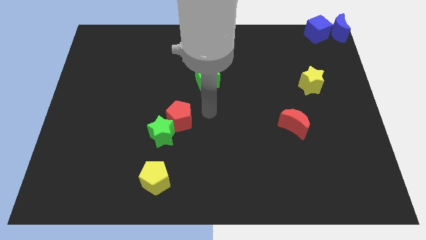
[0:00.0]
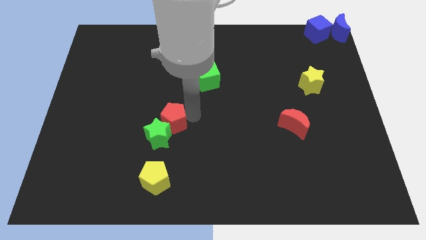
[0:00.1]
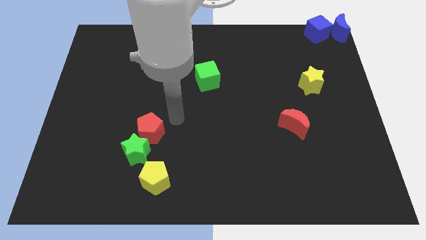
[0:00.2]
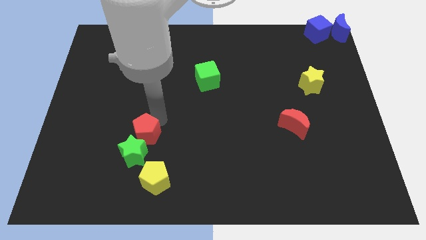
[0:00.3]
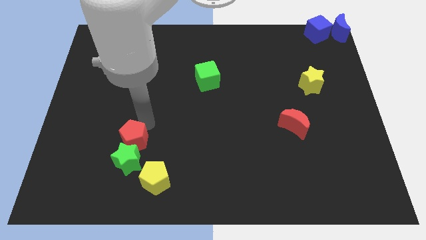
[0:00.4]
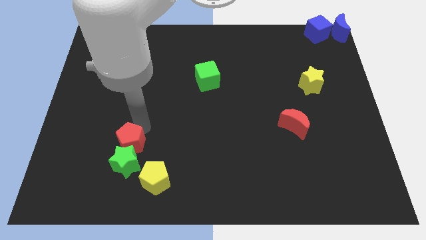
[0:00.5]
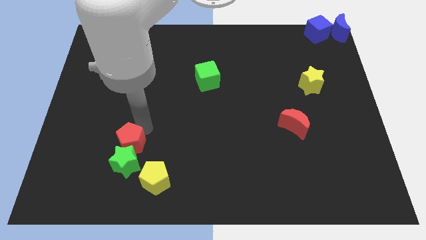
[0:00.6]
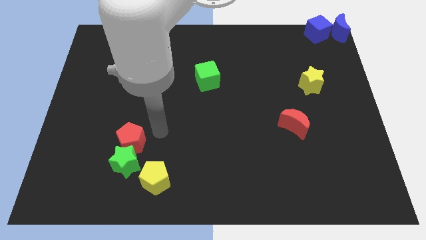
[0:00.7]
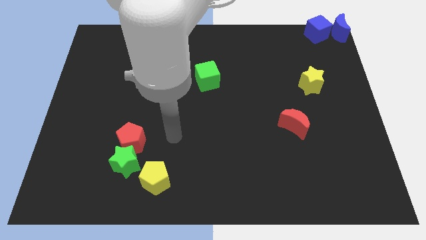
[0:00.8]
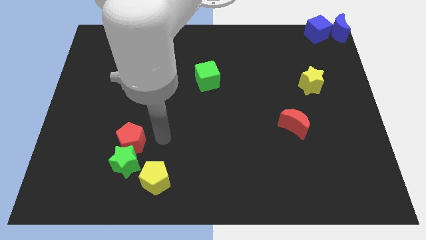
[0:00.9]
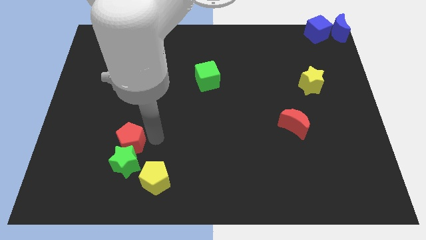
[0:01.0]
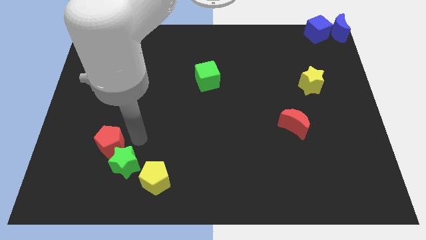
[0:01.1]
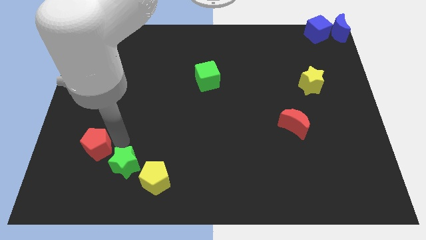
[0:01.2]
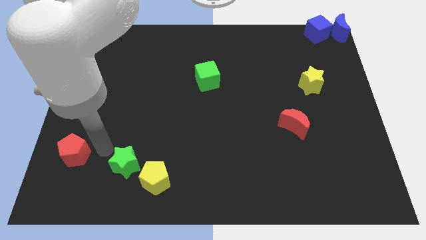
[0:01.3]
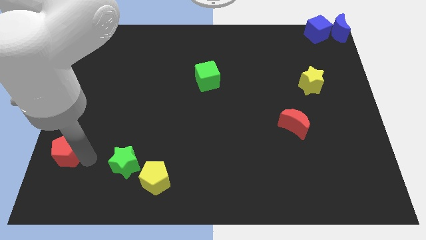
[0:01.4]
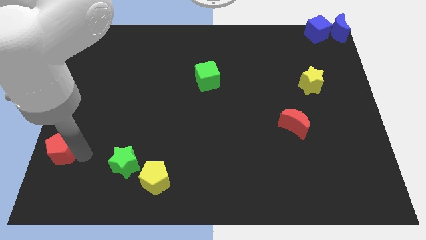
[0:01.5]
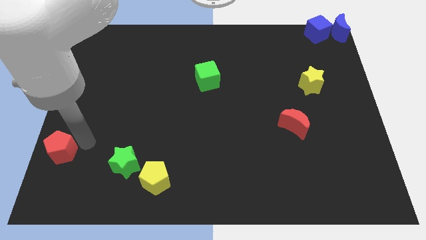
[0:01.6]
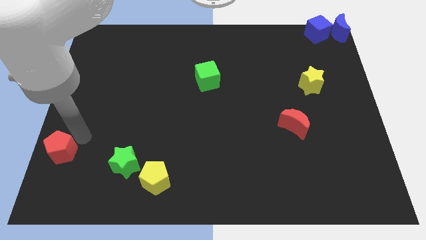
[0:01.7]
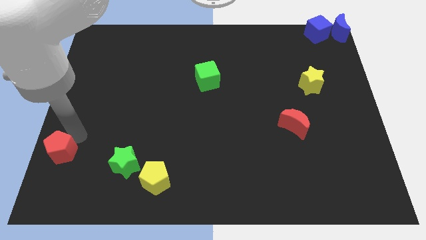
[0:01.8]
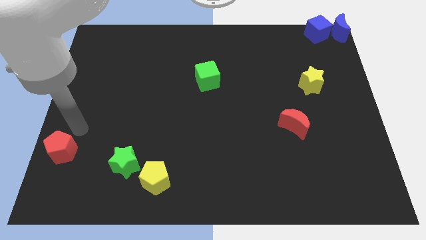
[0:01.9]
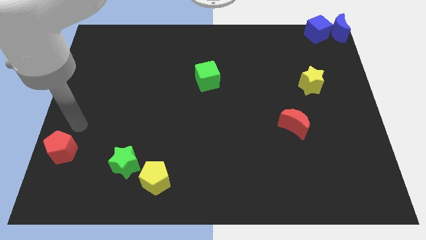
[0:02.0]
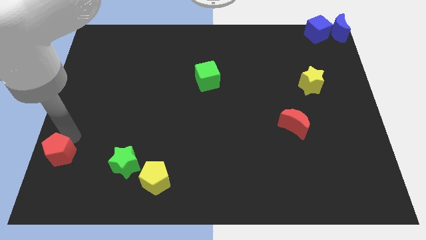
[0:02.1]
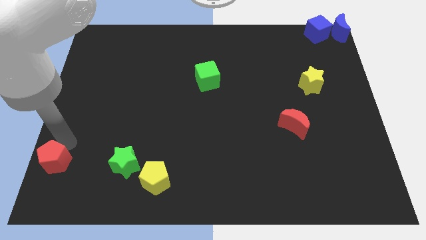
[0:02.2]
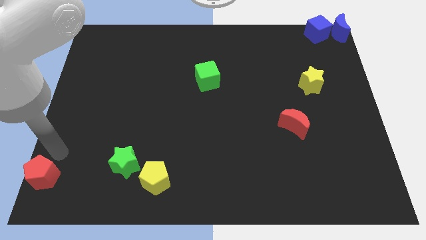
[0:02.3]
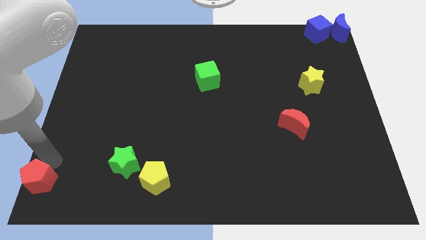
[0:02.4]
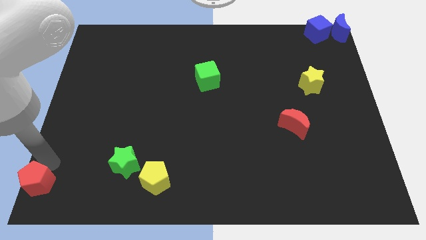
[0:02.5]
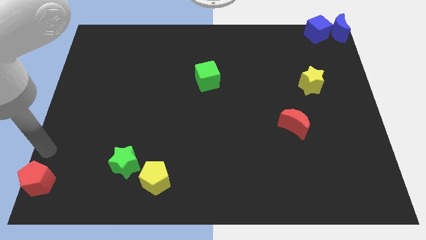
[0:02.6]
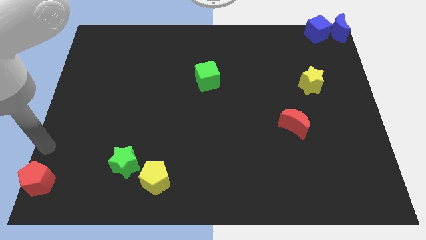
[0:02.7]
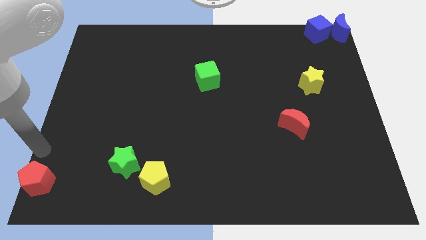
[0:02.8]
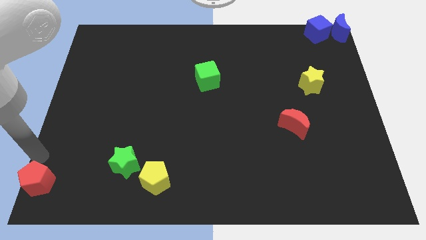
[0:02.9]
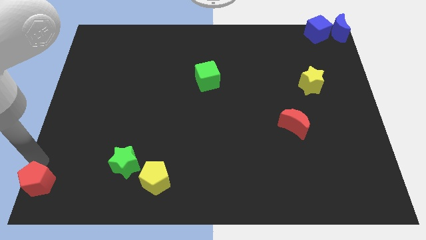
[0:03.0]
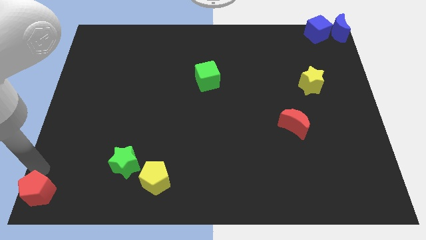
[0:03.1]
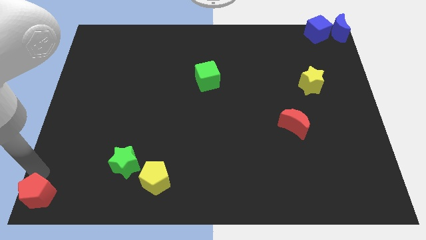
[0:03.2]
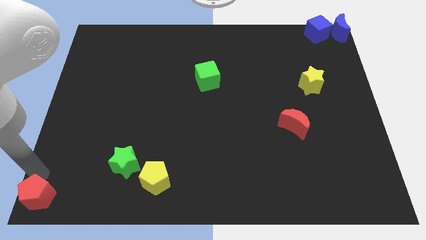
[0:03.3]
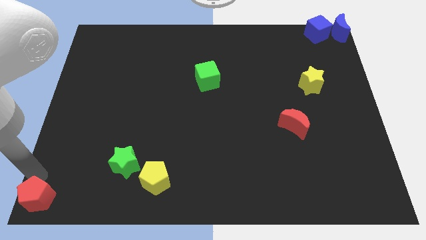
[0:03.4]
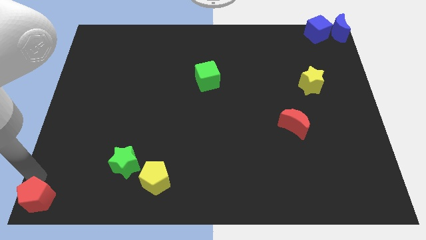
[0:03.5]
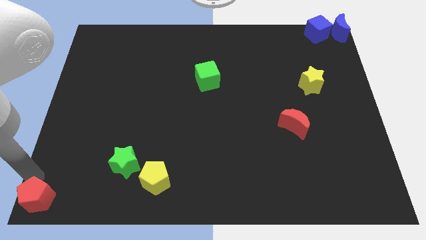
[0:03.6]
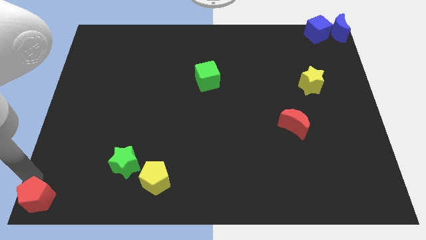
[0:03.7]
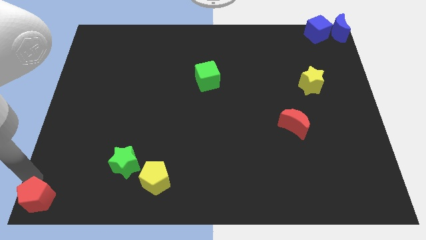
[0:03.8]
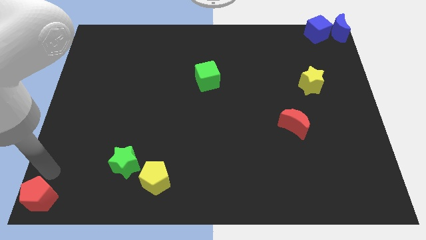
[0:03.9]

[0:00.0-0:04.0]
place the red pentagon at the bottom left corner of the board

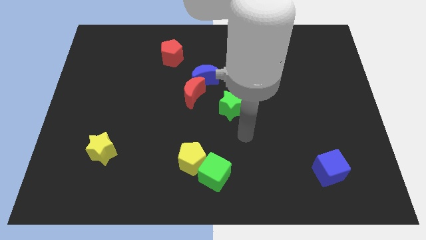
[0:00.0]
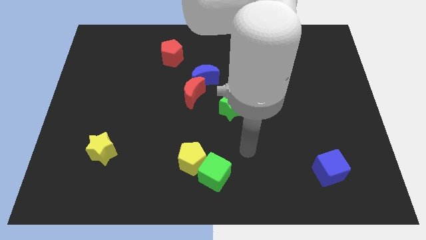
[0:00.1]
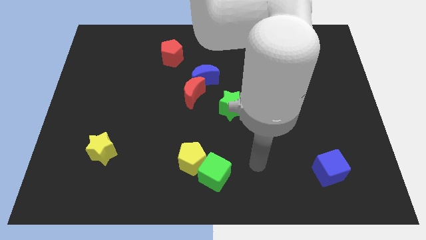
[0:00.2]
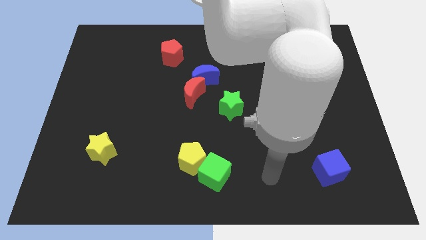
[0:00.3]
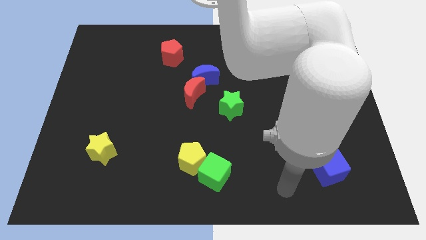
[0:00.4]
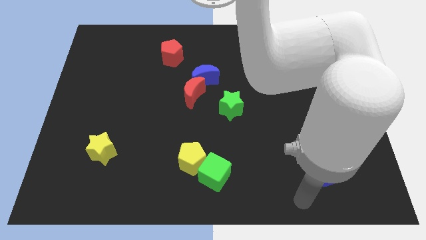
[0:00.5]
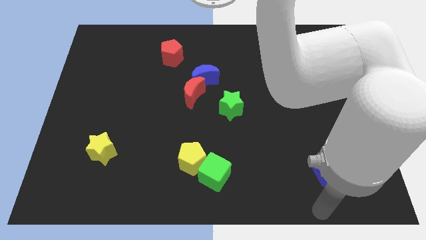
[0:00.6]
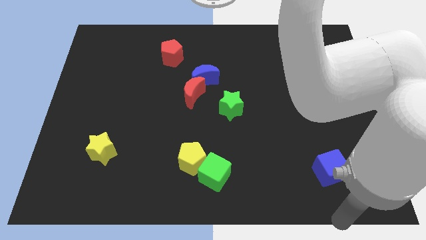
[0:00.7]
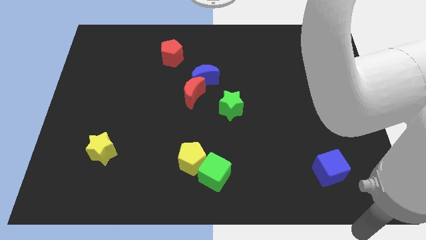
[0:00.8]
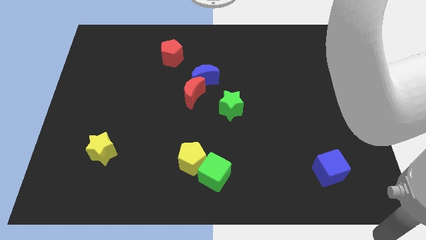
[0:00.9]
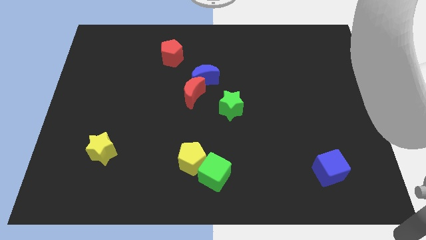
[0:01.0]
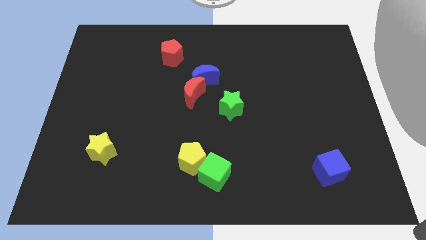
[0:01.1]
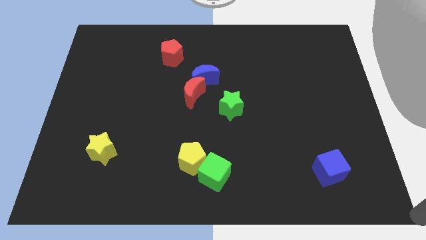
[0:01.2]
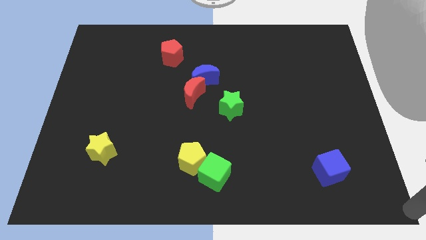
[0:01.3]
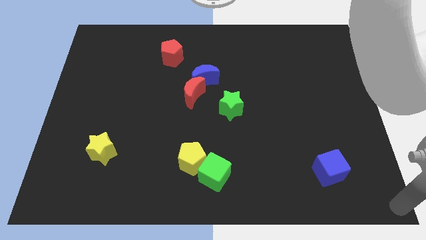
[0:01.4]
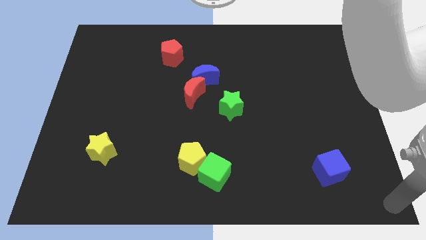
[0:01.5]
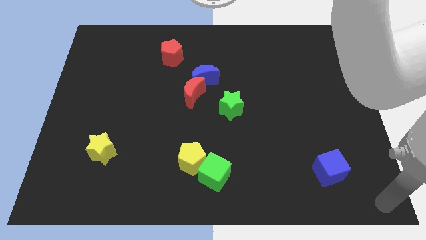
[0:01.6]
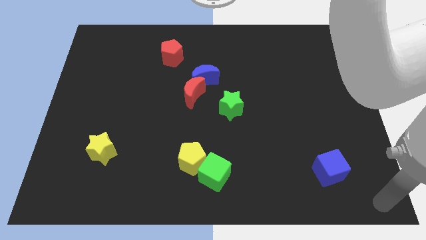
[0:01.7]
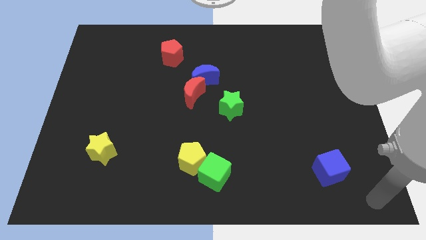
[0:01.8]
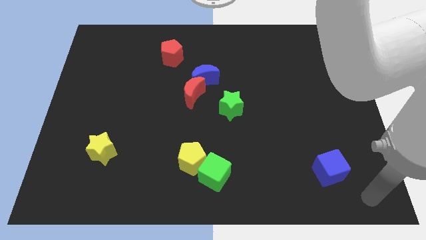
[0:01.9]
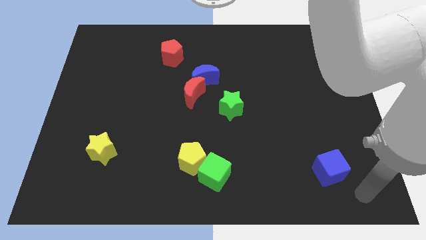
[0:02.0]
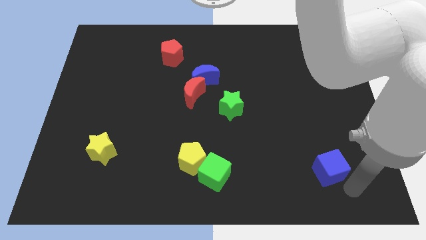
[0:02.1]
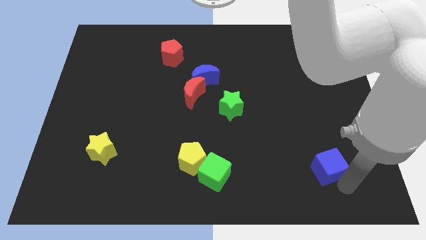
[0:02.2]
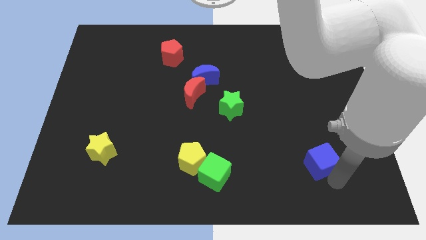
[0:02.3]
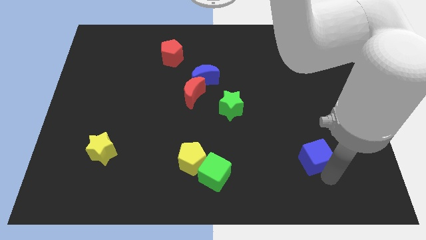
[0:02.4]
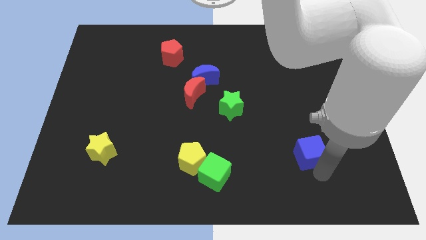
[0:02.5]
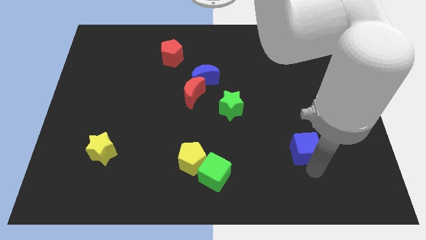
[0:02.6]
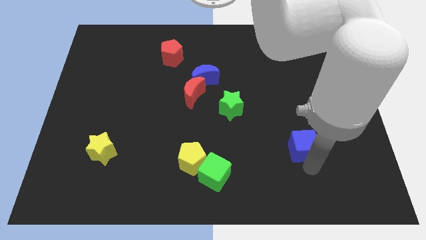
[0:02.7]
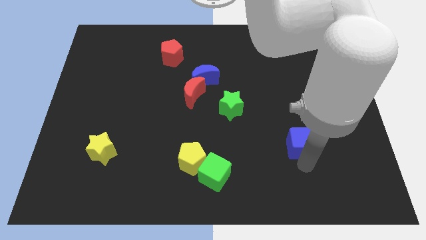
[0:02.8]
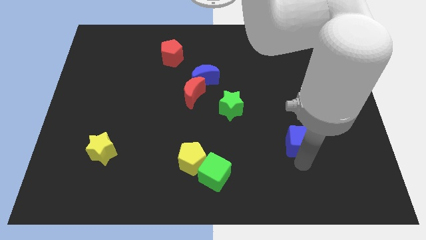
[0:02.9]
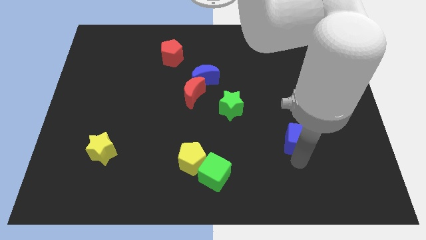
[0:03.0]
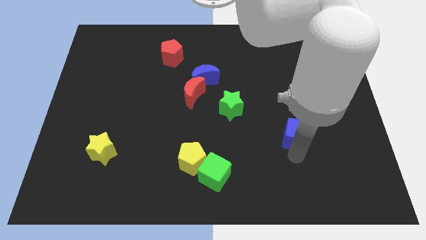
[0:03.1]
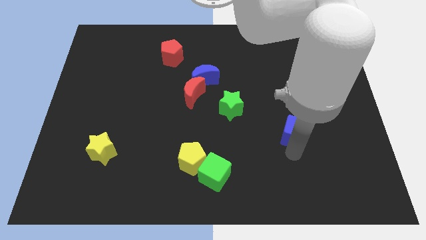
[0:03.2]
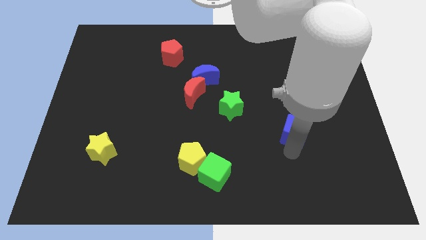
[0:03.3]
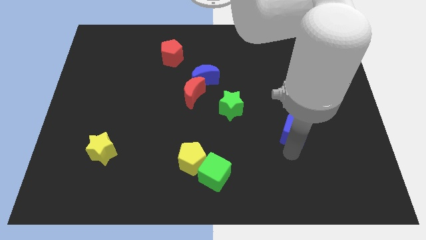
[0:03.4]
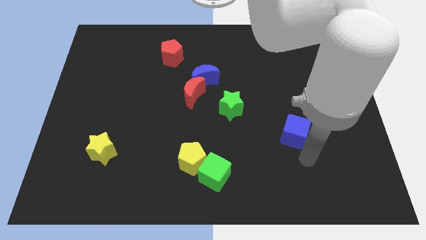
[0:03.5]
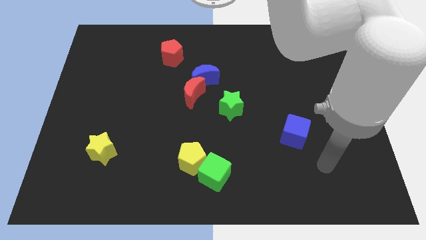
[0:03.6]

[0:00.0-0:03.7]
move the blue cube diagonally to the green star

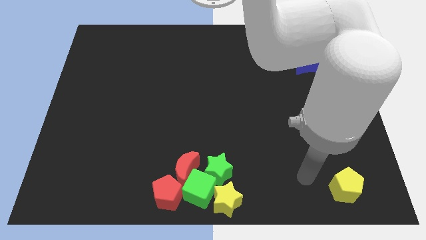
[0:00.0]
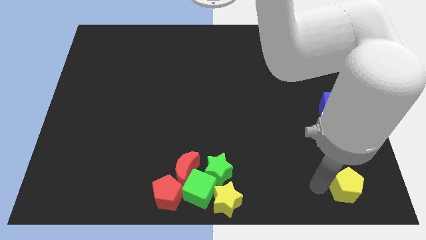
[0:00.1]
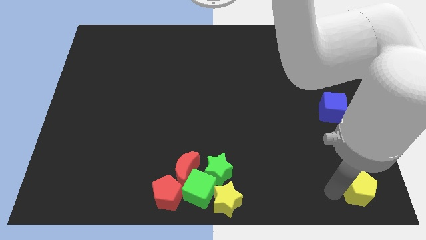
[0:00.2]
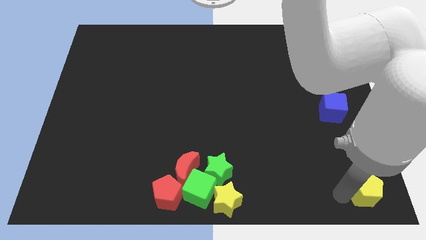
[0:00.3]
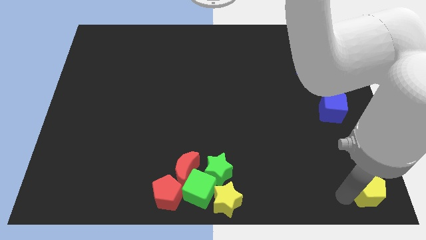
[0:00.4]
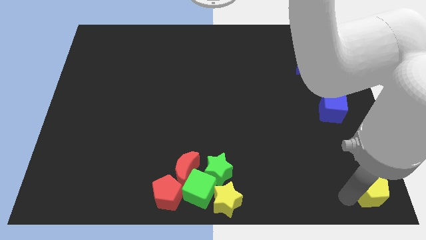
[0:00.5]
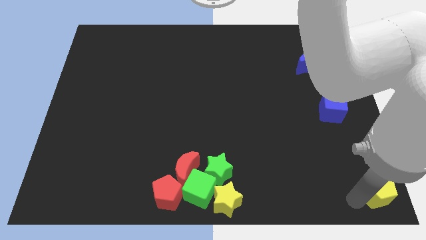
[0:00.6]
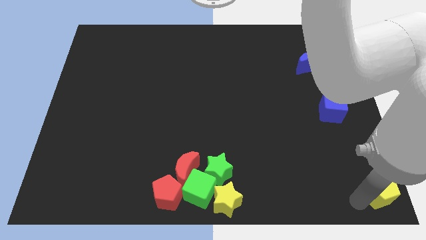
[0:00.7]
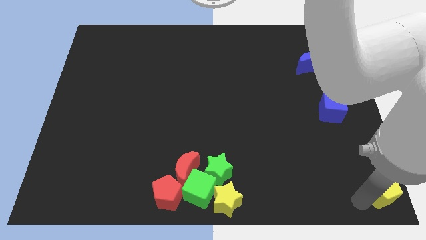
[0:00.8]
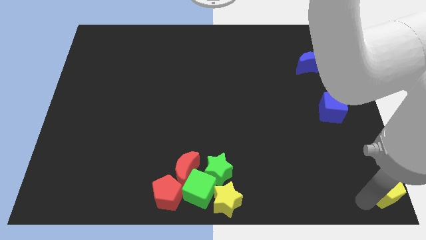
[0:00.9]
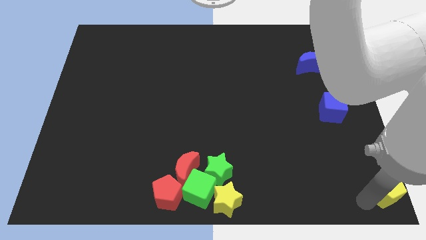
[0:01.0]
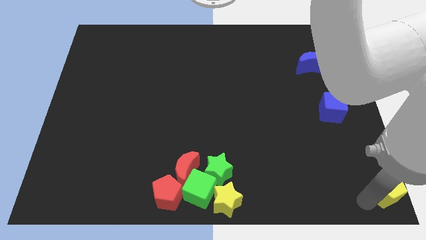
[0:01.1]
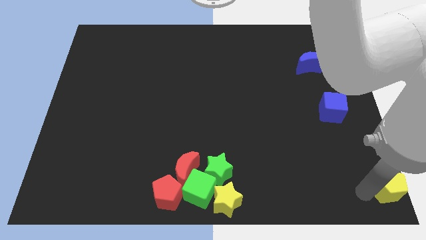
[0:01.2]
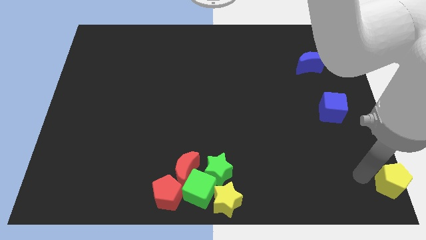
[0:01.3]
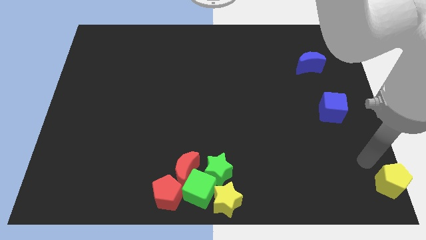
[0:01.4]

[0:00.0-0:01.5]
move the yellow pentagon at the bottom right side of the board
